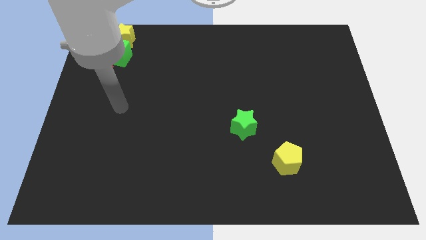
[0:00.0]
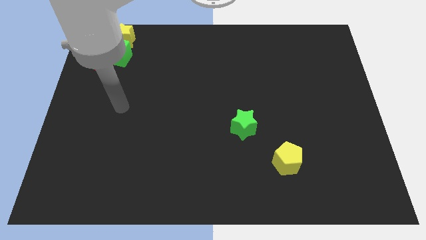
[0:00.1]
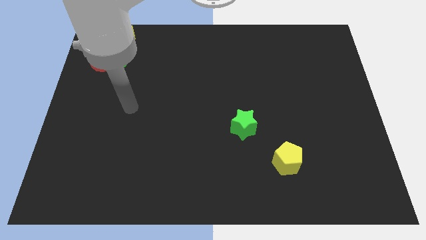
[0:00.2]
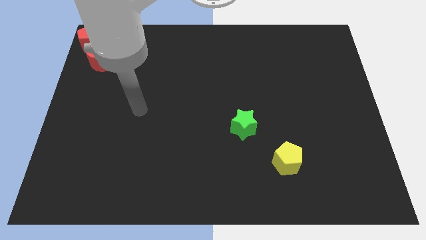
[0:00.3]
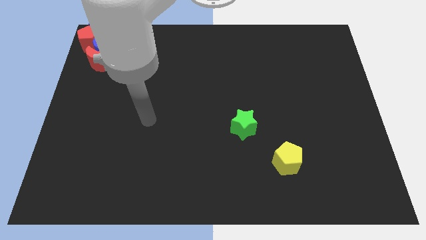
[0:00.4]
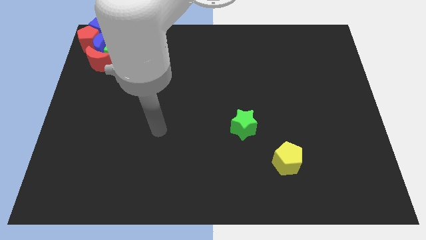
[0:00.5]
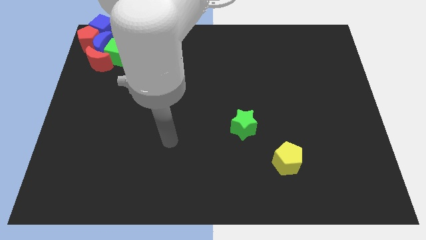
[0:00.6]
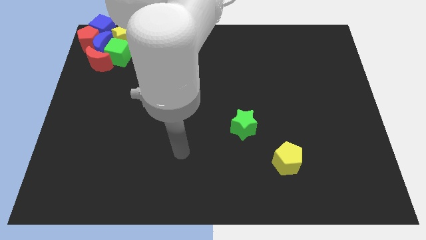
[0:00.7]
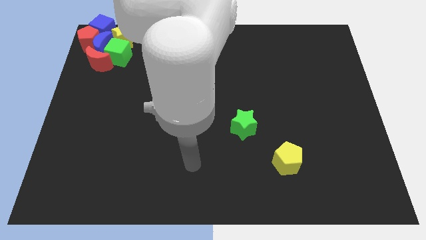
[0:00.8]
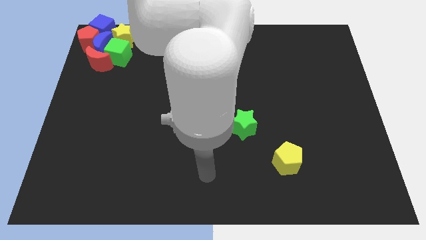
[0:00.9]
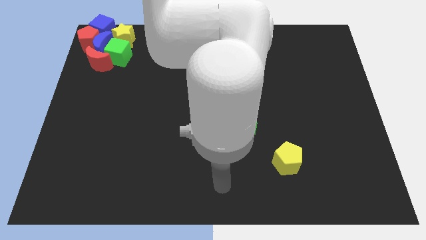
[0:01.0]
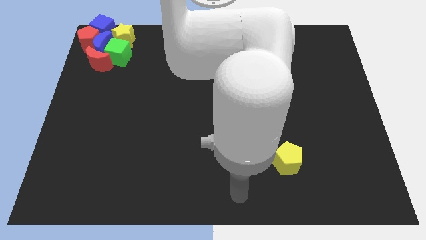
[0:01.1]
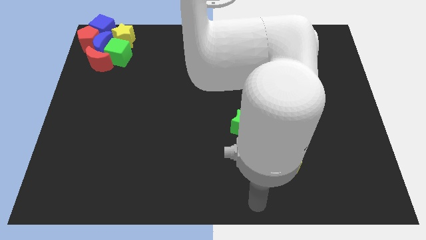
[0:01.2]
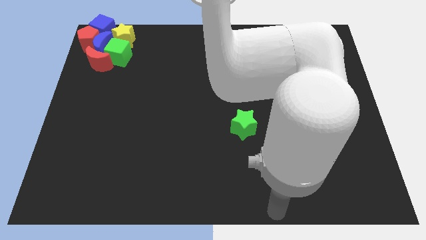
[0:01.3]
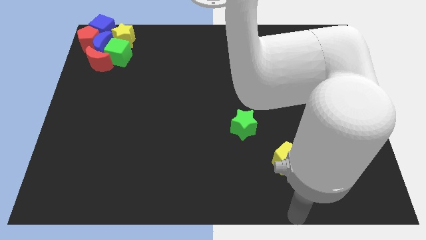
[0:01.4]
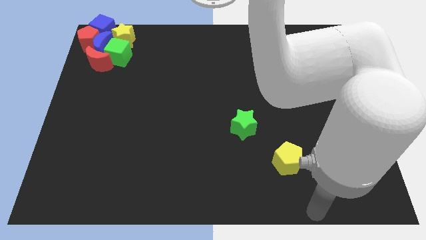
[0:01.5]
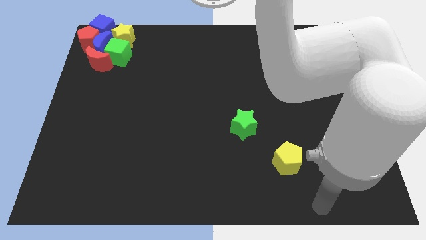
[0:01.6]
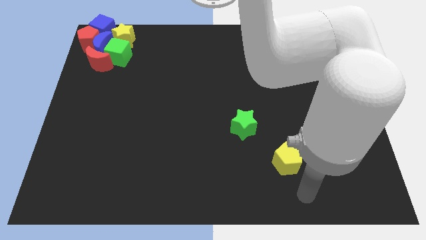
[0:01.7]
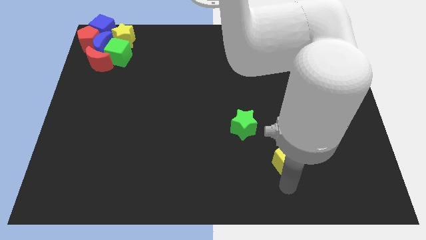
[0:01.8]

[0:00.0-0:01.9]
move your arm towards the yellow pentagon

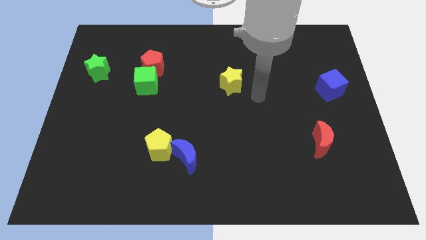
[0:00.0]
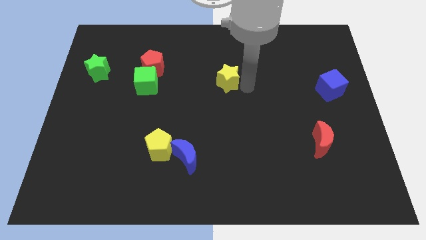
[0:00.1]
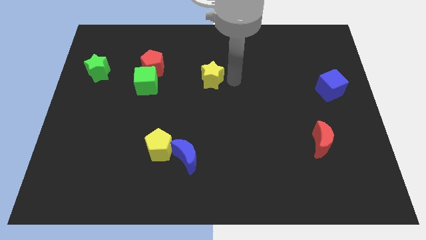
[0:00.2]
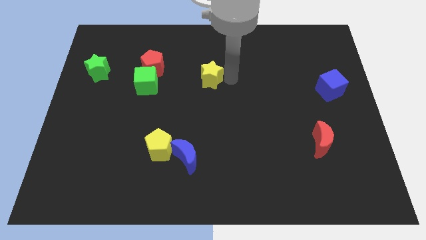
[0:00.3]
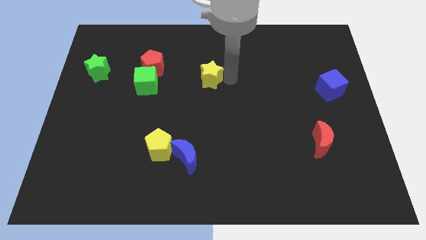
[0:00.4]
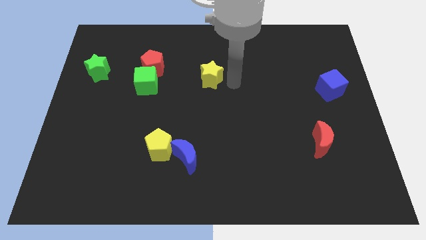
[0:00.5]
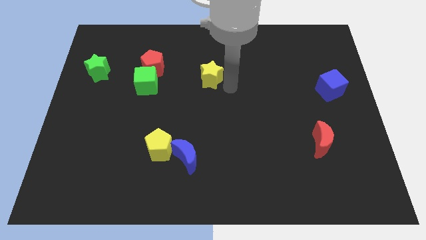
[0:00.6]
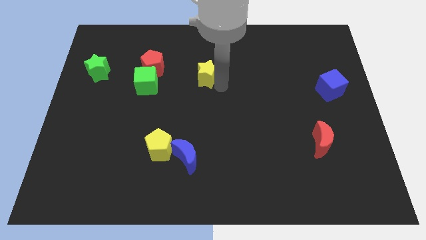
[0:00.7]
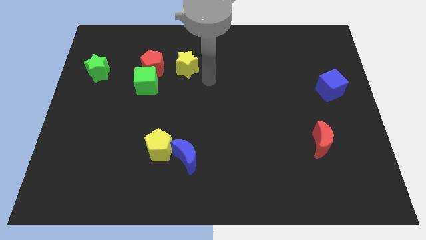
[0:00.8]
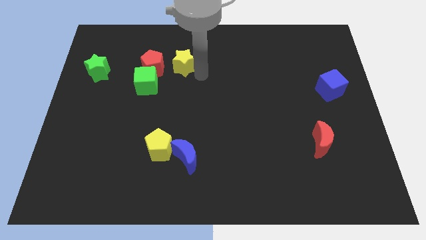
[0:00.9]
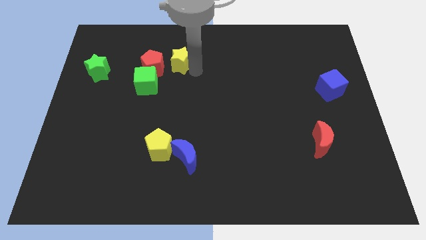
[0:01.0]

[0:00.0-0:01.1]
move yellow star right beside red pentagon

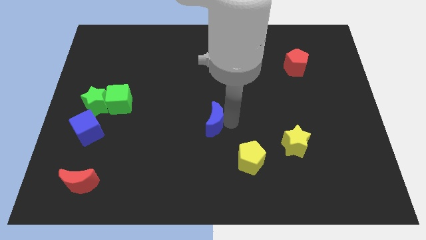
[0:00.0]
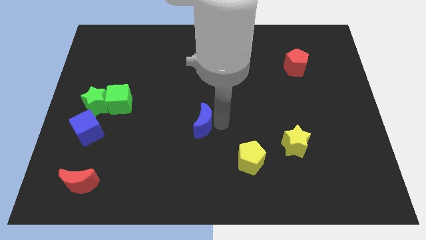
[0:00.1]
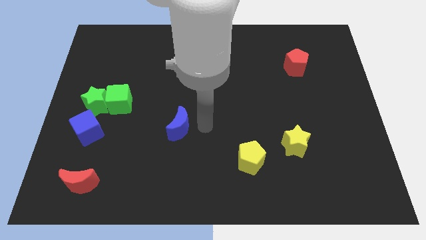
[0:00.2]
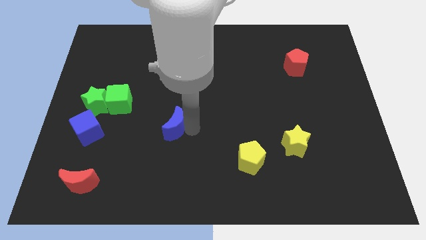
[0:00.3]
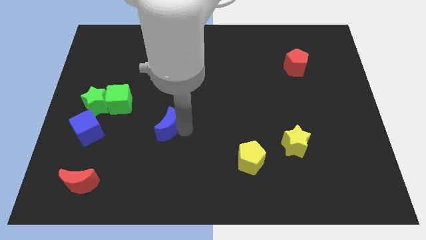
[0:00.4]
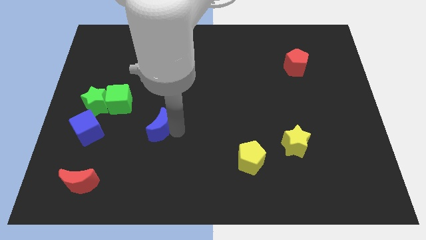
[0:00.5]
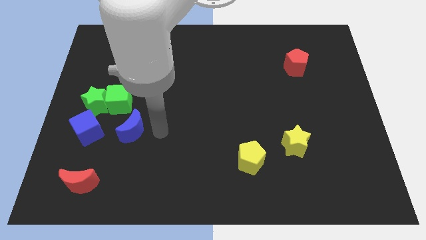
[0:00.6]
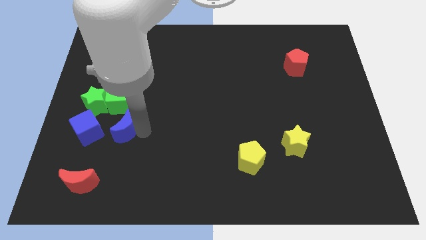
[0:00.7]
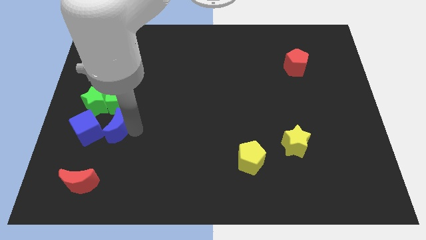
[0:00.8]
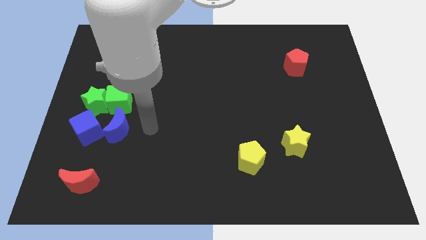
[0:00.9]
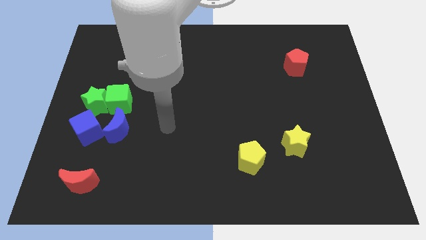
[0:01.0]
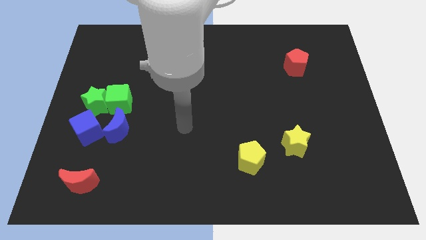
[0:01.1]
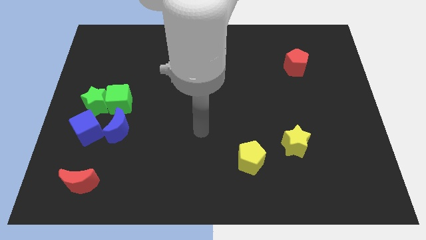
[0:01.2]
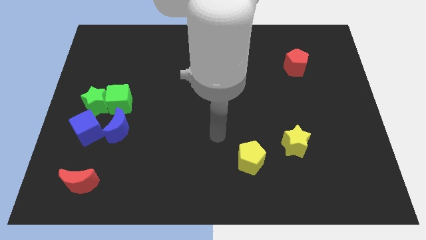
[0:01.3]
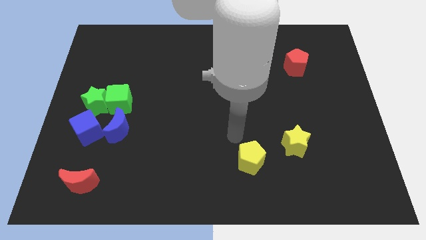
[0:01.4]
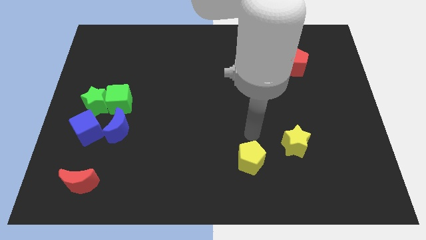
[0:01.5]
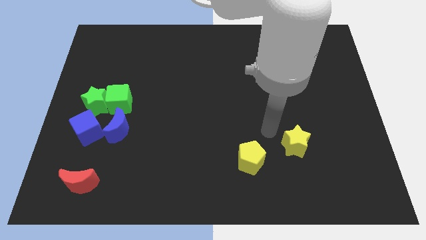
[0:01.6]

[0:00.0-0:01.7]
move the blue moon right to the blue cube

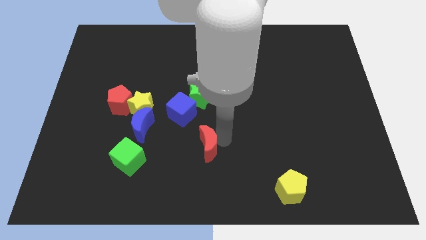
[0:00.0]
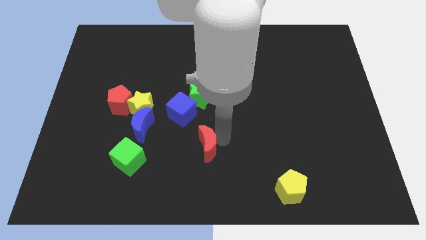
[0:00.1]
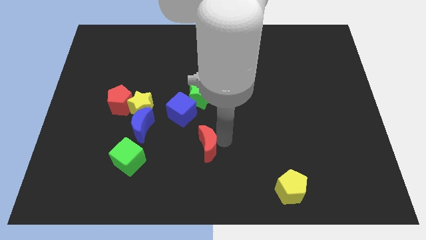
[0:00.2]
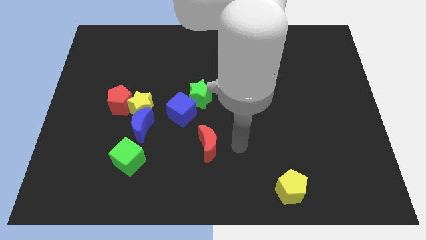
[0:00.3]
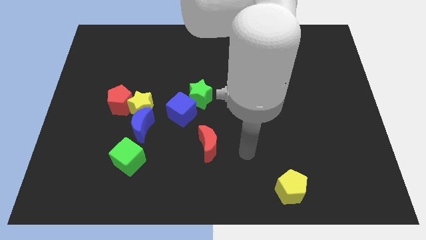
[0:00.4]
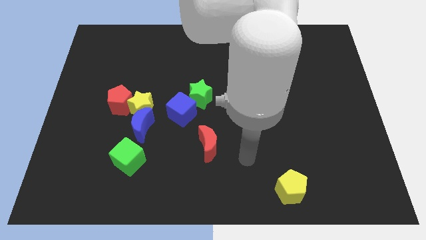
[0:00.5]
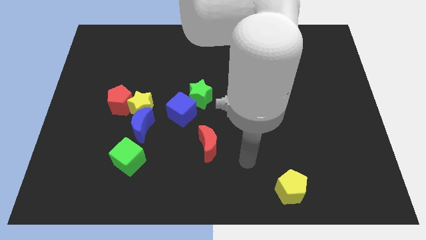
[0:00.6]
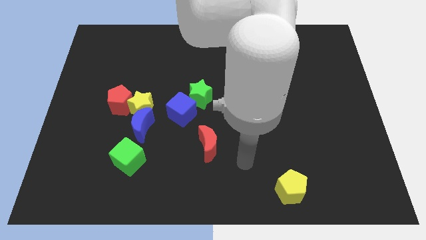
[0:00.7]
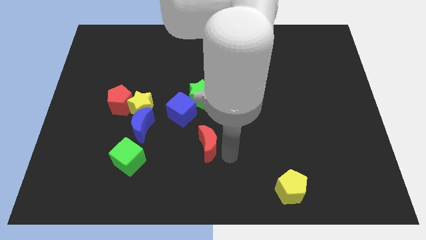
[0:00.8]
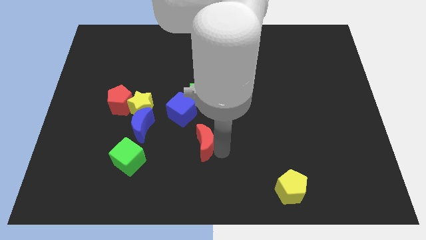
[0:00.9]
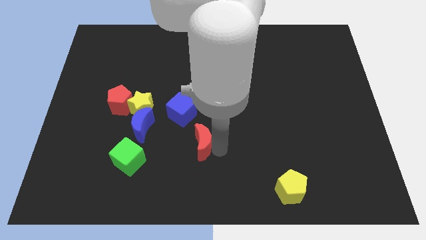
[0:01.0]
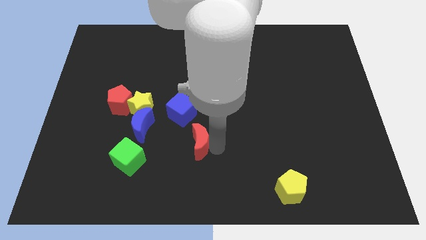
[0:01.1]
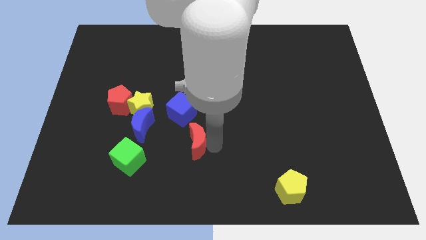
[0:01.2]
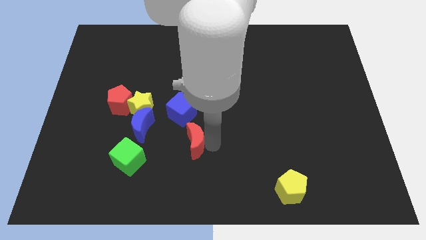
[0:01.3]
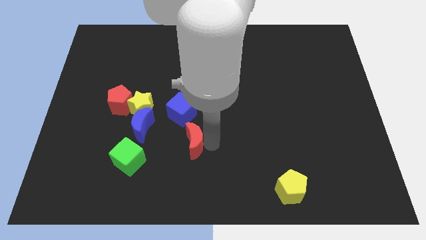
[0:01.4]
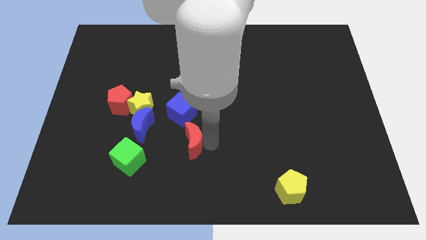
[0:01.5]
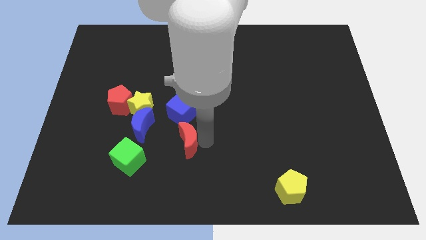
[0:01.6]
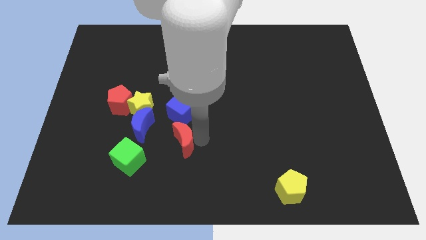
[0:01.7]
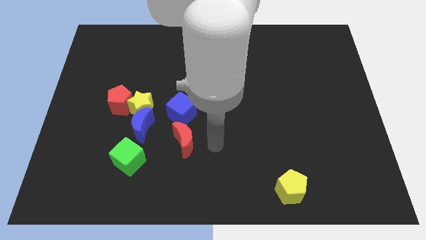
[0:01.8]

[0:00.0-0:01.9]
adjust the red moon at the bottom of the blue cube

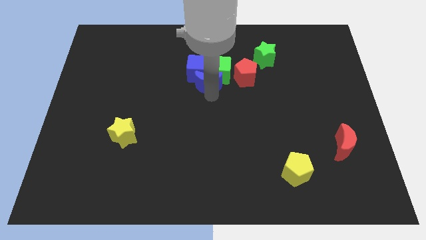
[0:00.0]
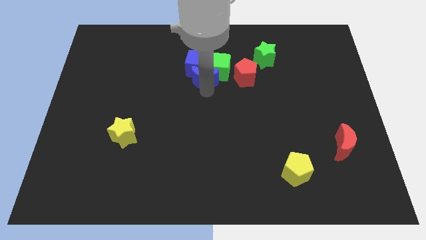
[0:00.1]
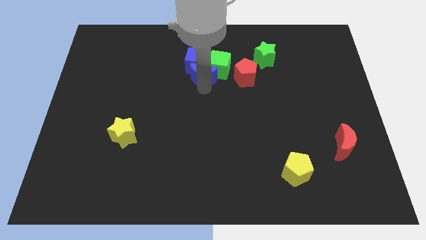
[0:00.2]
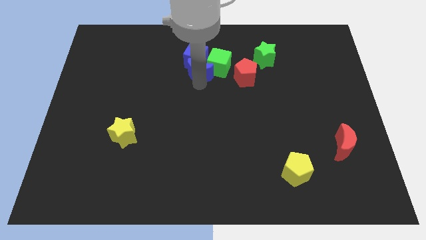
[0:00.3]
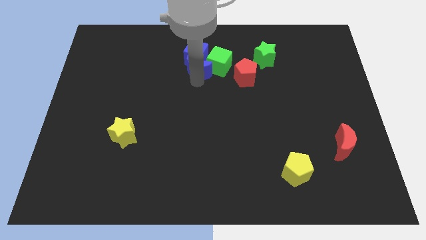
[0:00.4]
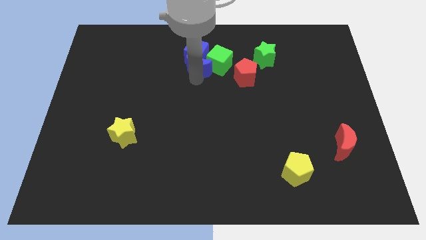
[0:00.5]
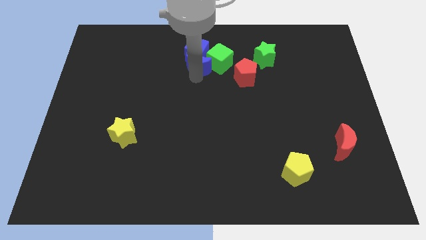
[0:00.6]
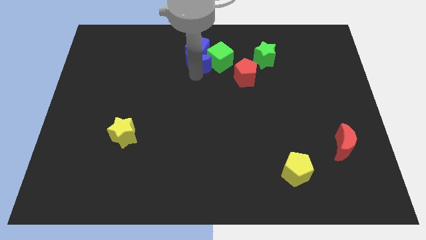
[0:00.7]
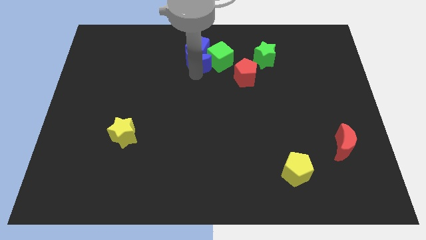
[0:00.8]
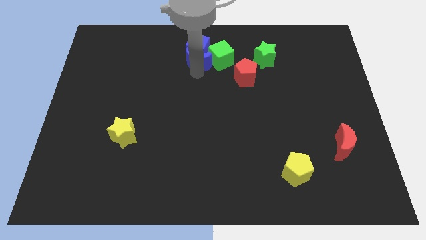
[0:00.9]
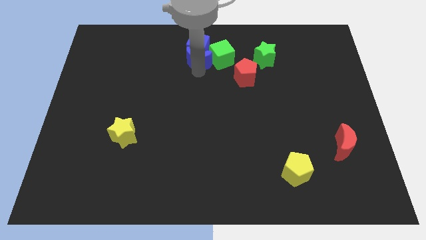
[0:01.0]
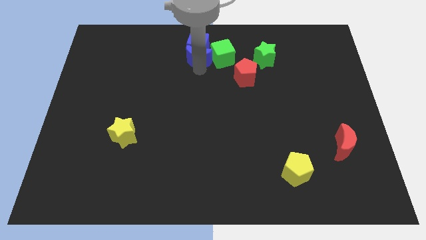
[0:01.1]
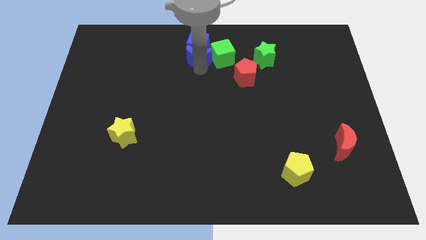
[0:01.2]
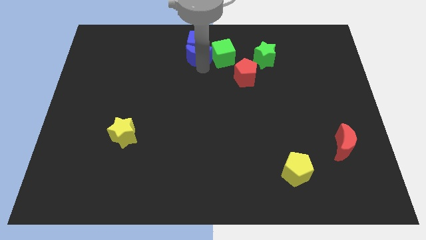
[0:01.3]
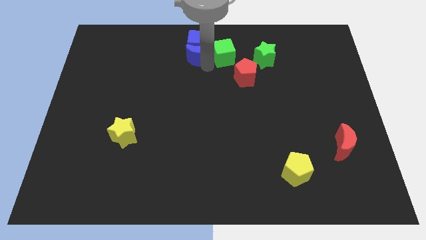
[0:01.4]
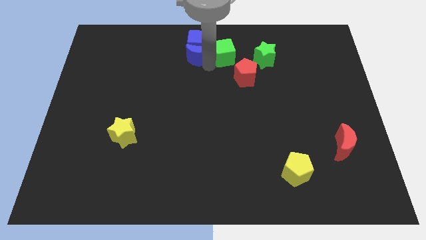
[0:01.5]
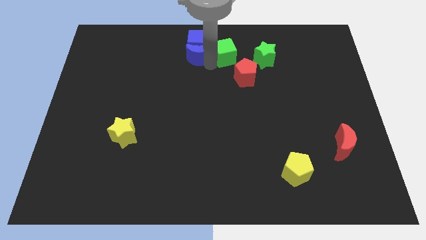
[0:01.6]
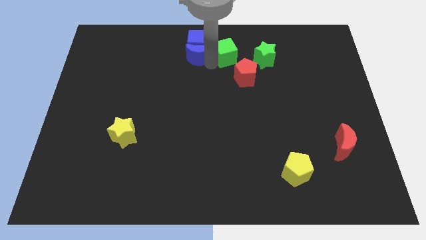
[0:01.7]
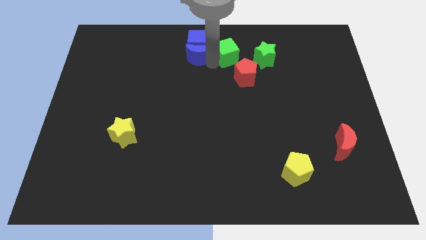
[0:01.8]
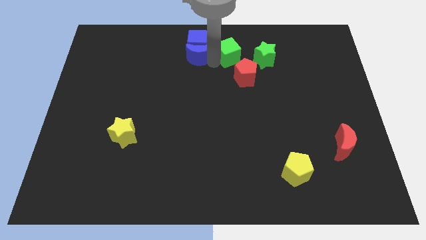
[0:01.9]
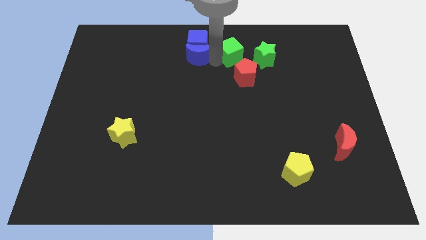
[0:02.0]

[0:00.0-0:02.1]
slide the green cube to the right of blue crescent

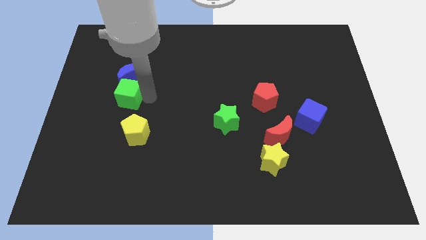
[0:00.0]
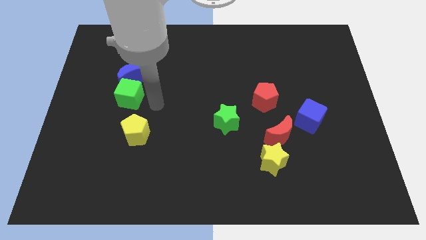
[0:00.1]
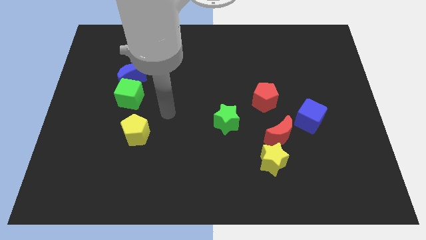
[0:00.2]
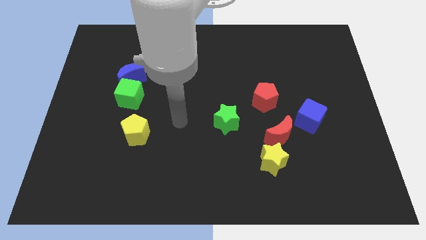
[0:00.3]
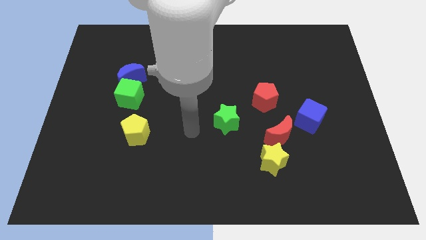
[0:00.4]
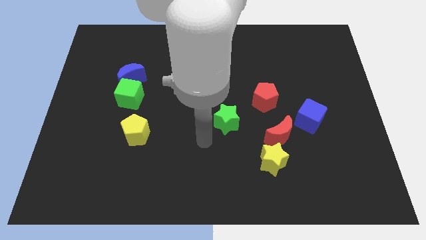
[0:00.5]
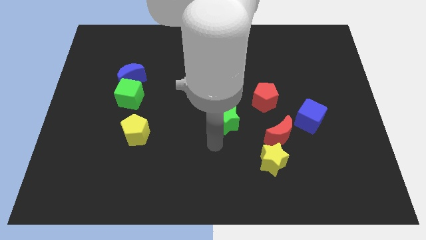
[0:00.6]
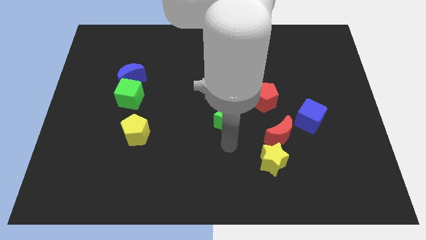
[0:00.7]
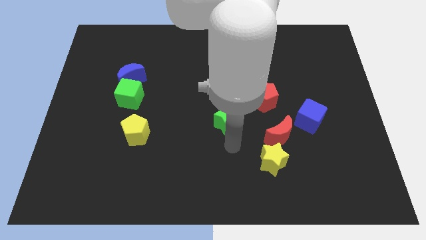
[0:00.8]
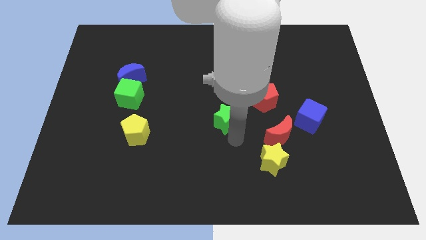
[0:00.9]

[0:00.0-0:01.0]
move your arm away from the green cube
